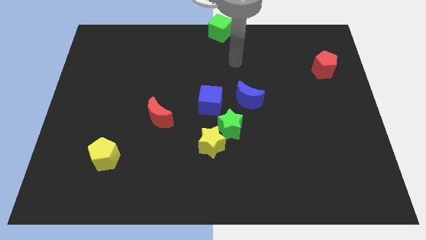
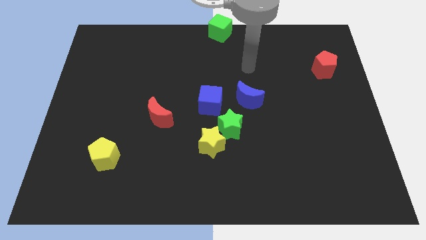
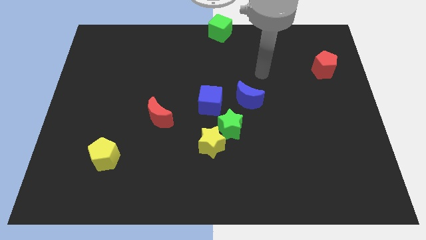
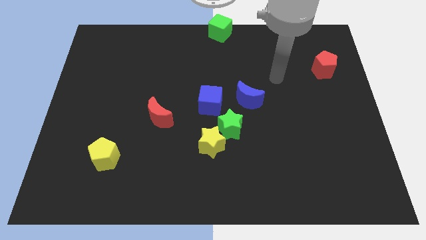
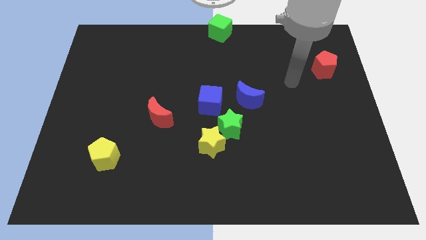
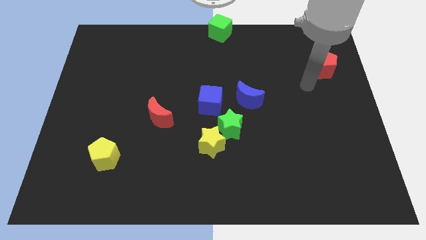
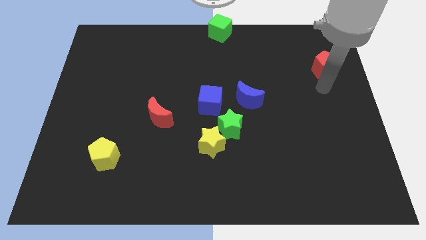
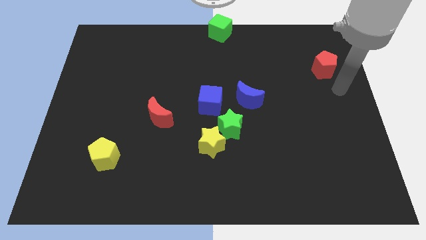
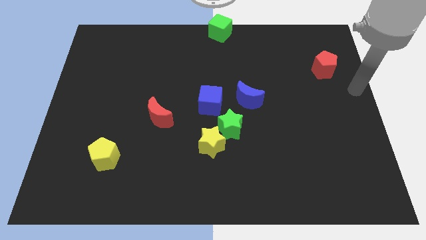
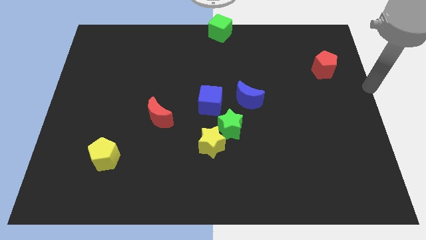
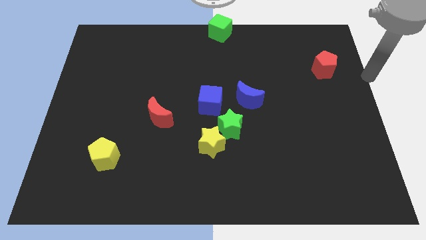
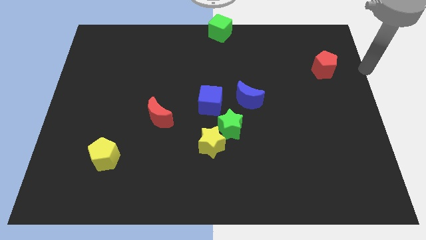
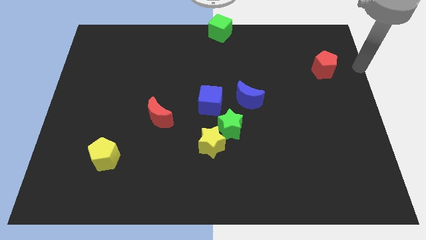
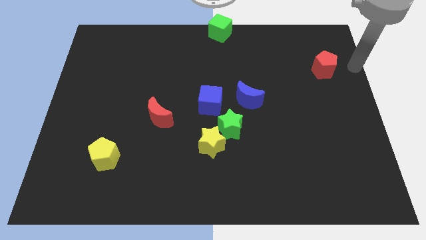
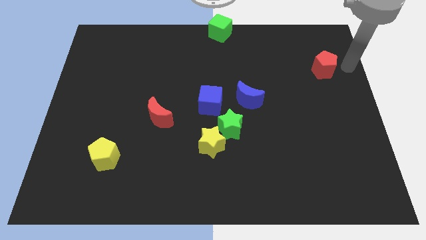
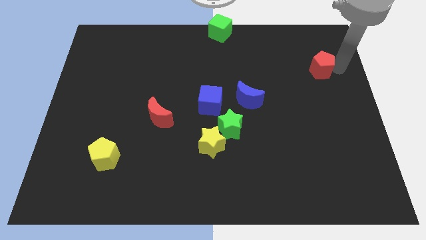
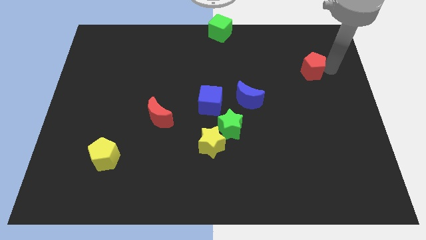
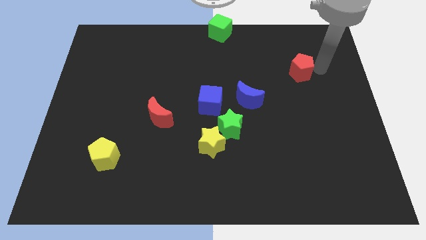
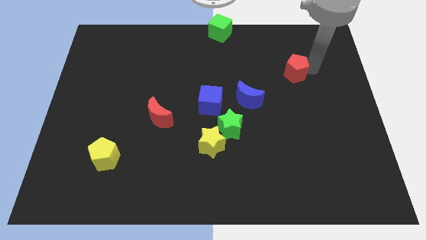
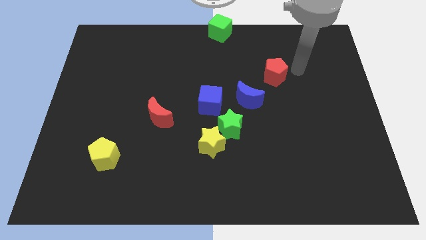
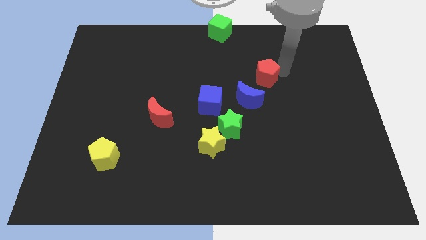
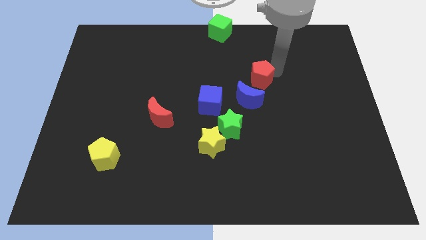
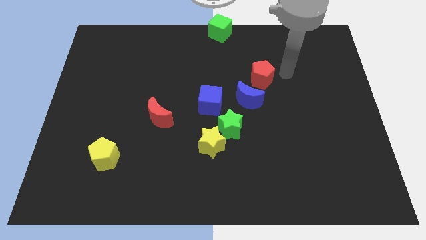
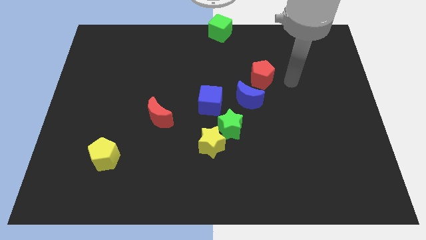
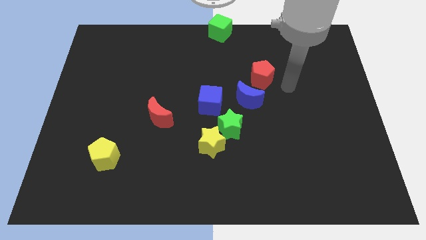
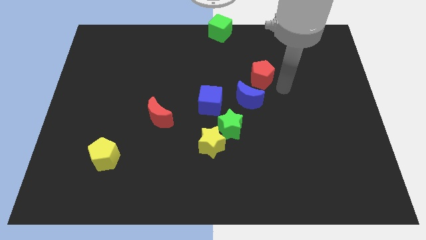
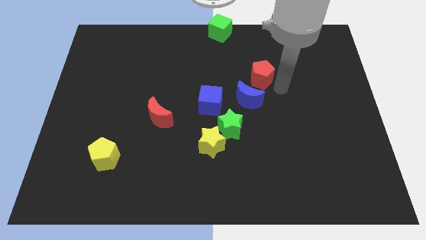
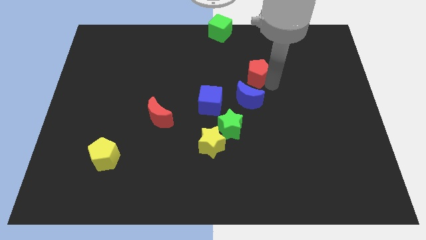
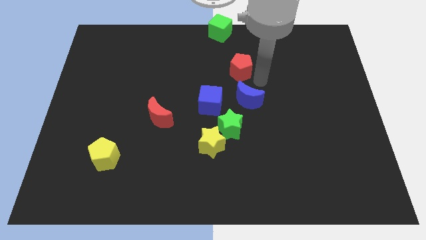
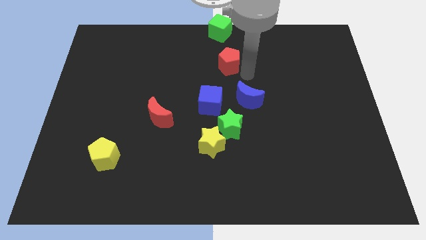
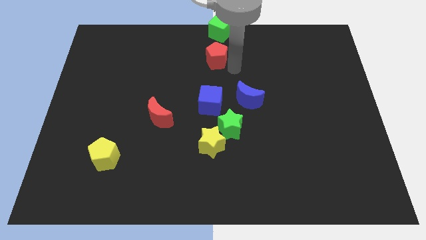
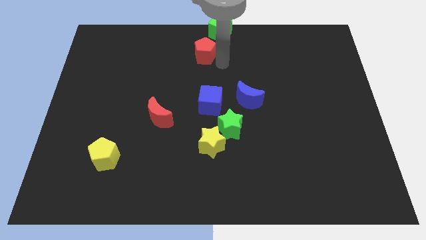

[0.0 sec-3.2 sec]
push the red pentagon to the bottom of the green cube

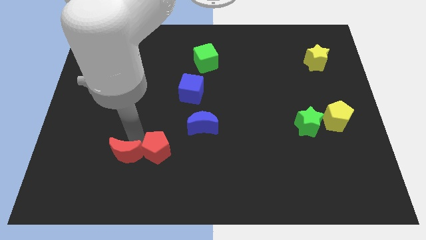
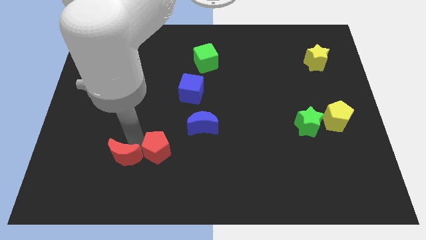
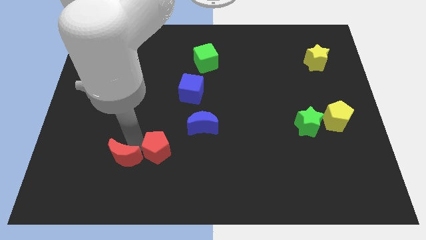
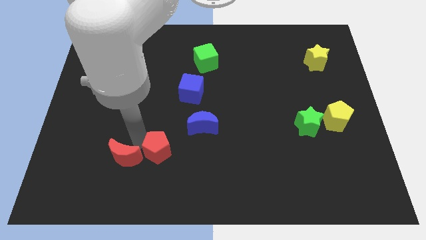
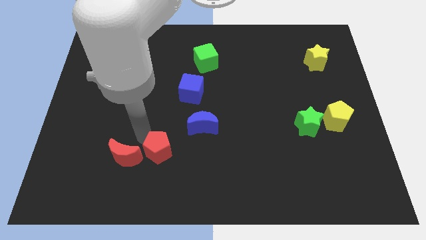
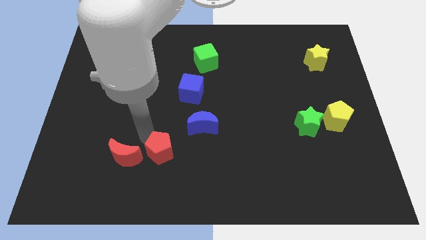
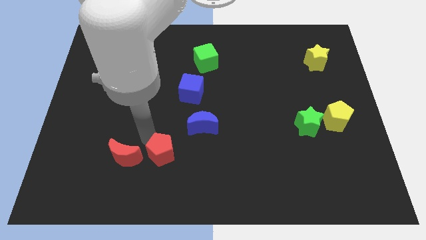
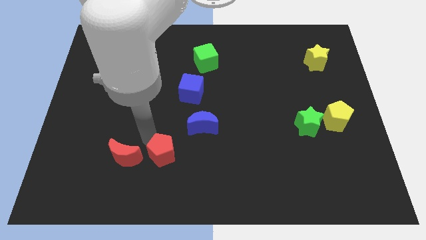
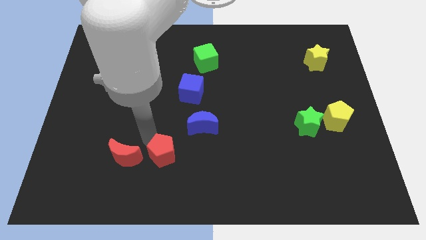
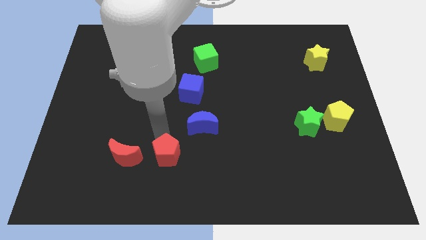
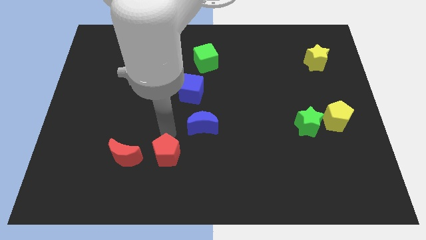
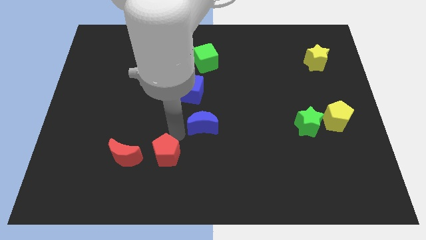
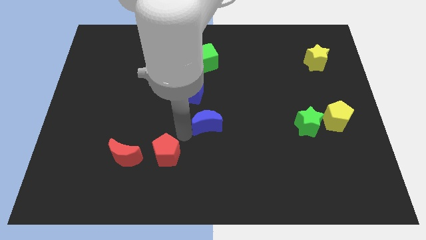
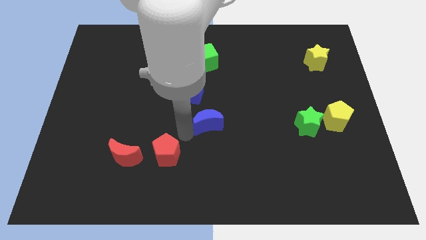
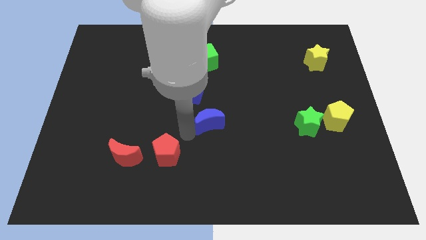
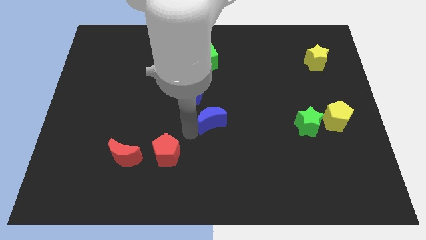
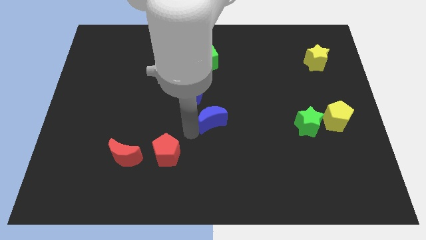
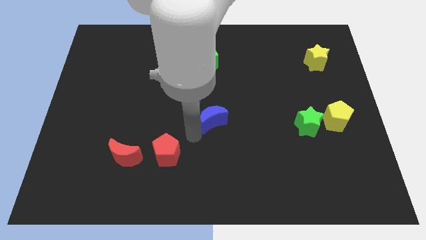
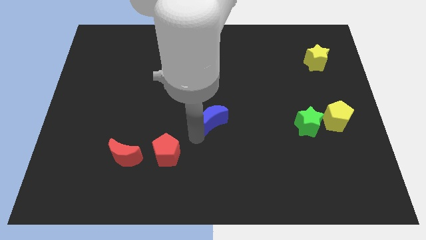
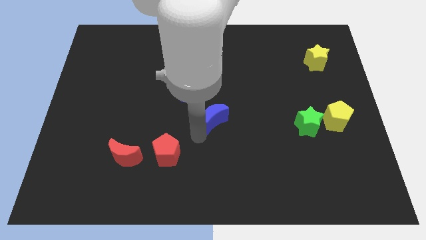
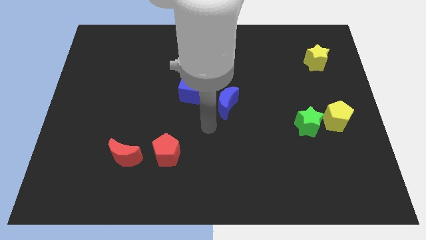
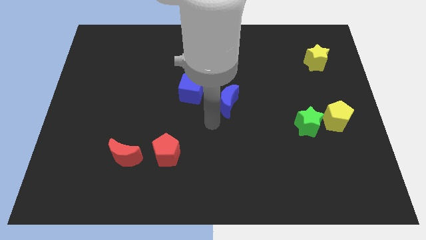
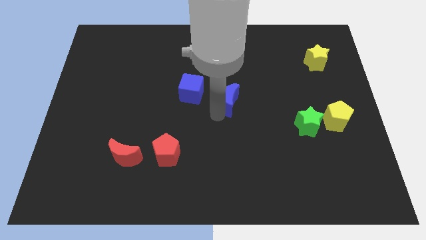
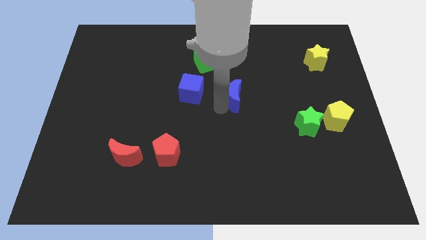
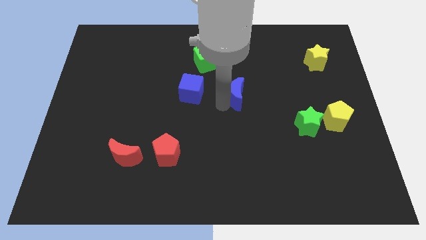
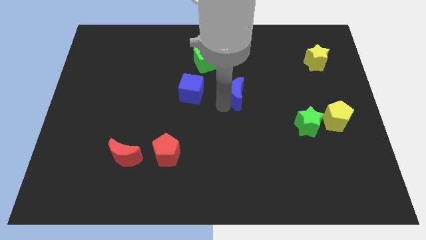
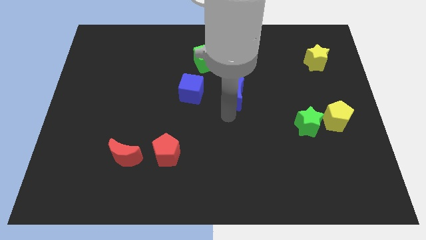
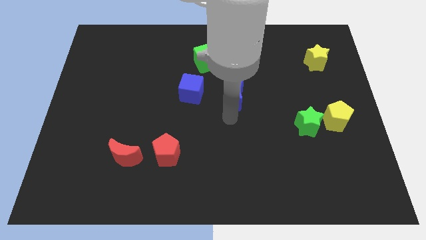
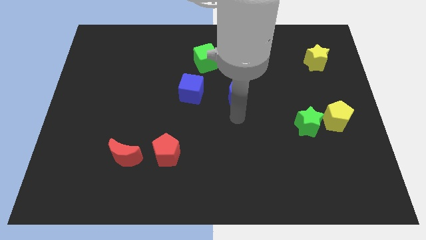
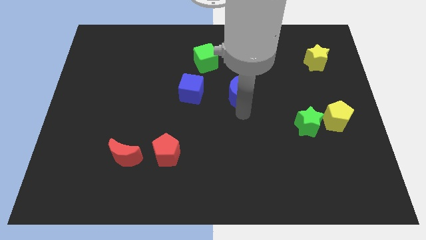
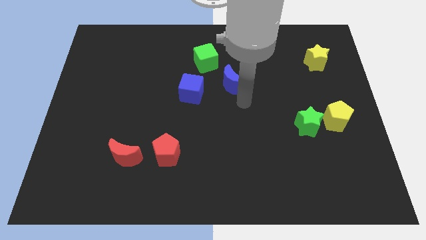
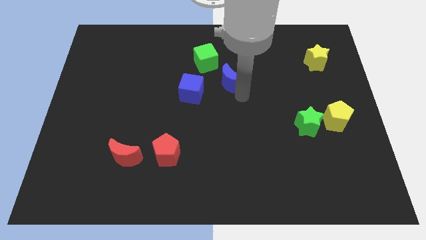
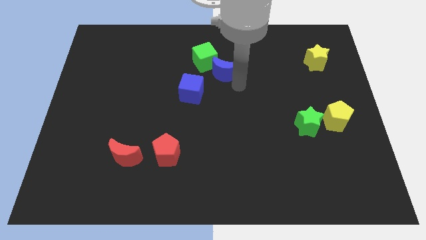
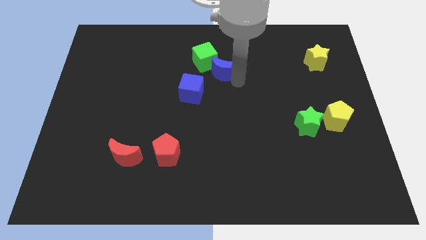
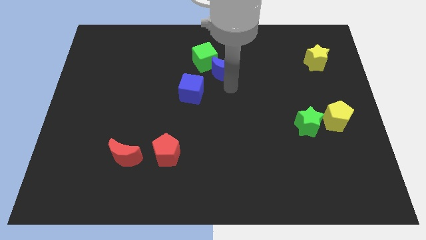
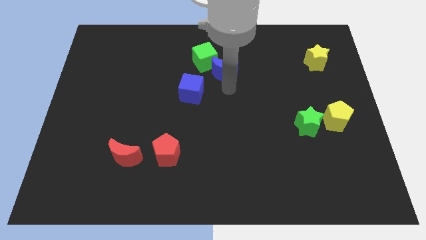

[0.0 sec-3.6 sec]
move blue crescent into the green cube

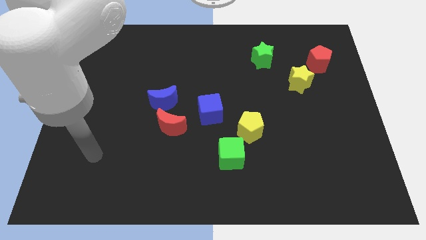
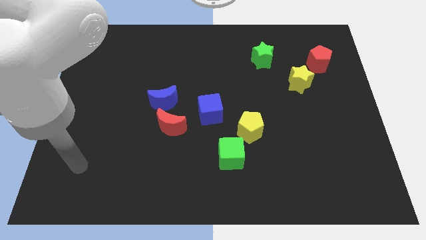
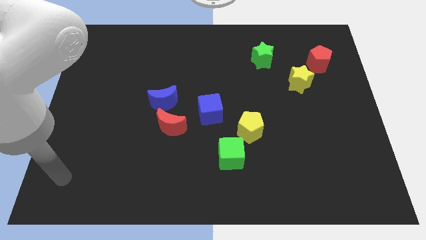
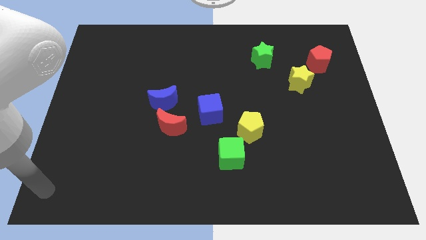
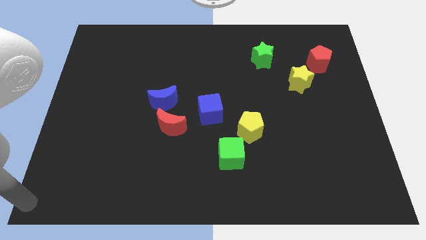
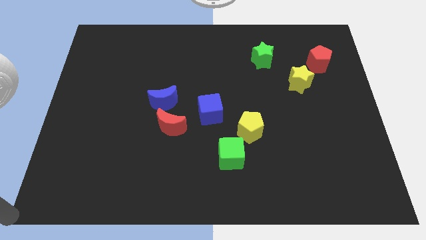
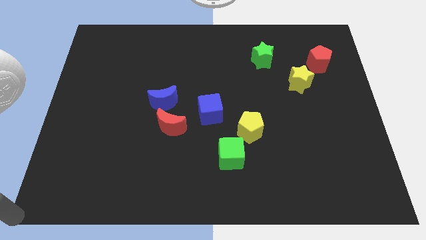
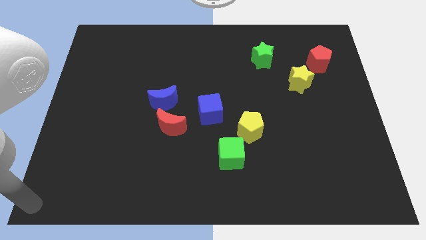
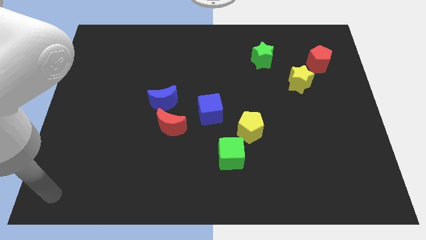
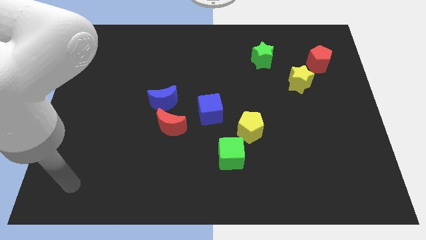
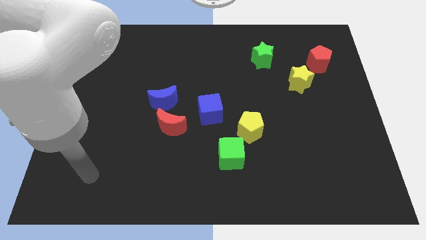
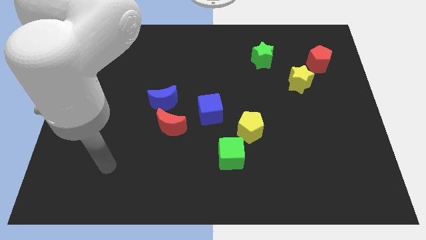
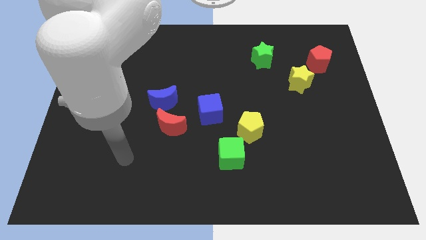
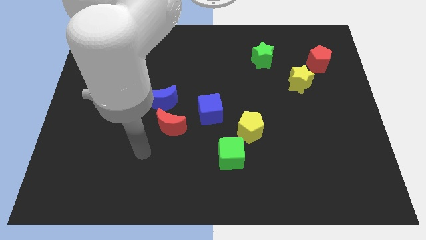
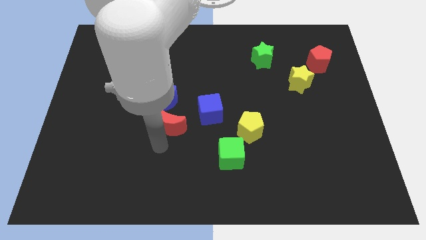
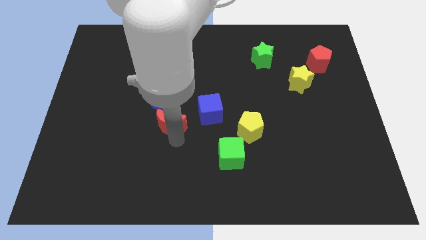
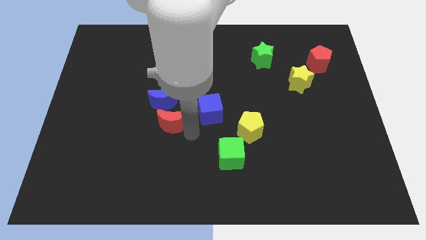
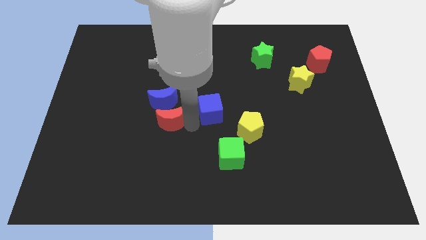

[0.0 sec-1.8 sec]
move the arm towards the red crescent

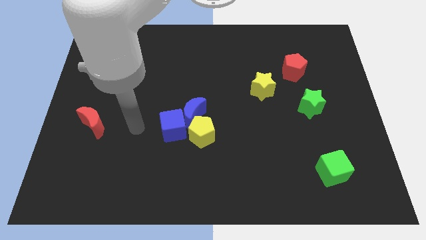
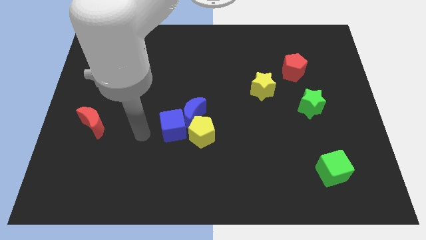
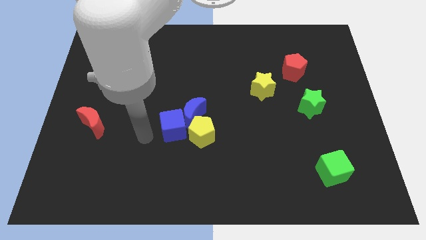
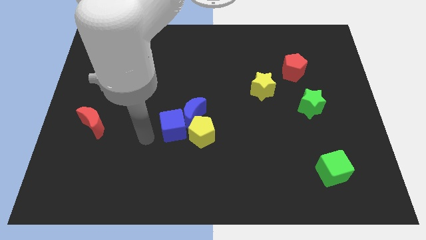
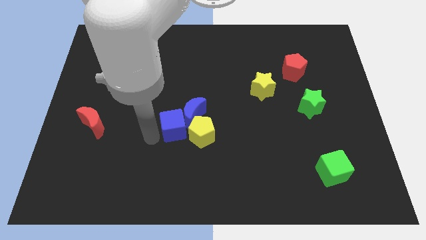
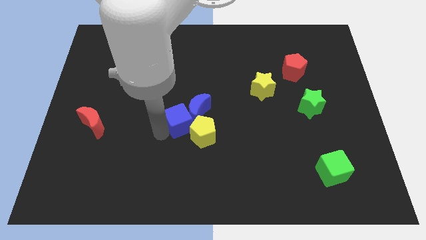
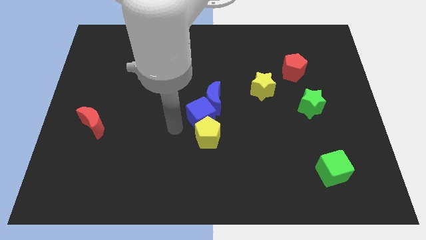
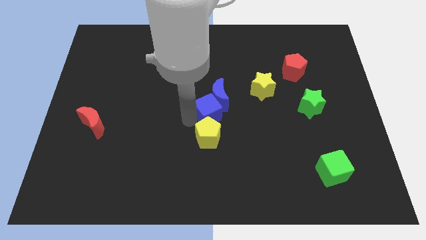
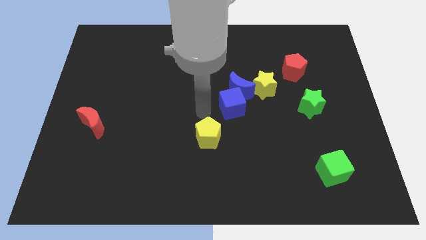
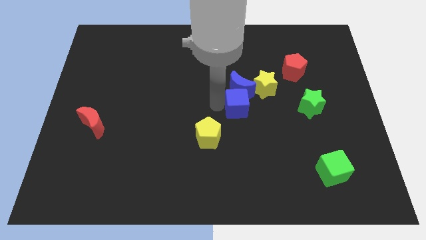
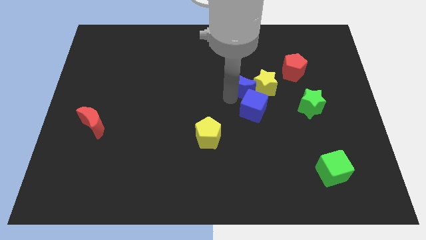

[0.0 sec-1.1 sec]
push the blue blocks into the yellow star
